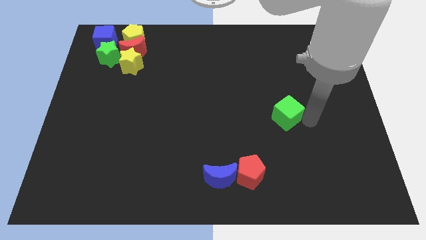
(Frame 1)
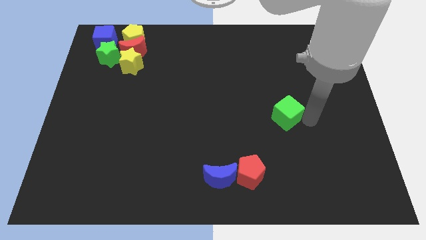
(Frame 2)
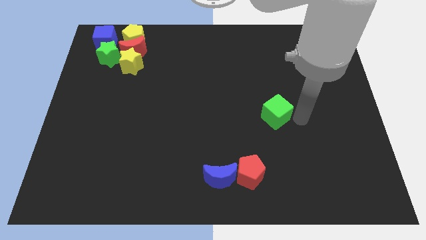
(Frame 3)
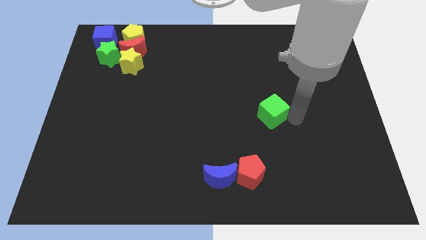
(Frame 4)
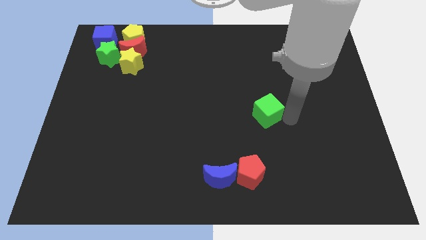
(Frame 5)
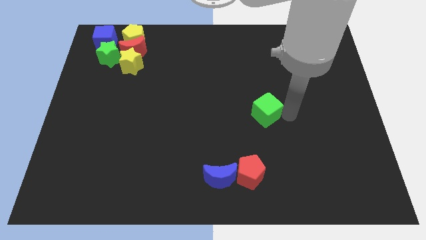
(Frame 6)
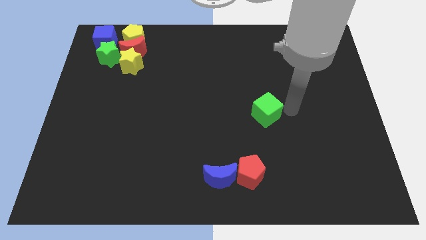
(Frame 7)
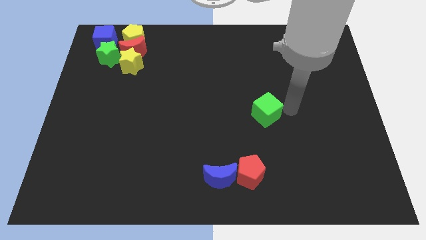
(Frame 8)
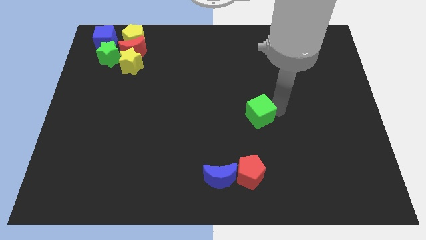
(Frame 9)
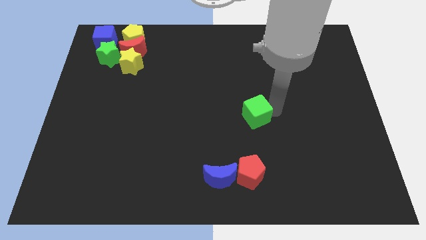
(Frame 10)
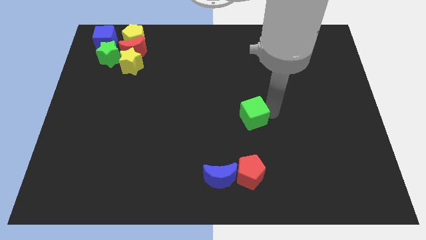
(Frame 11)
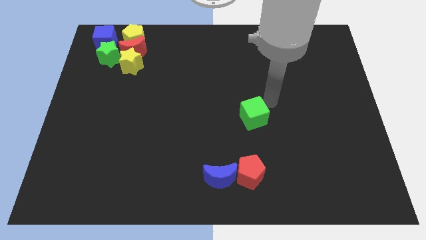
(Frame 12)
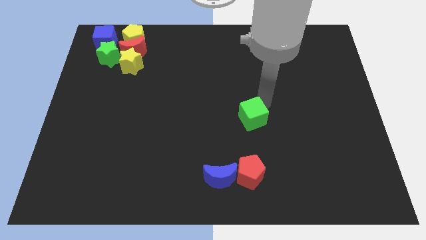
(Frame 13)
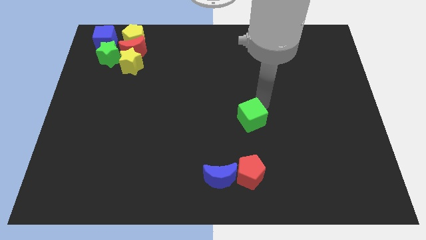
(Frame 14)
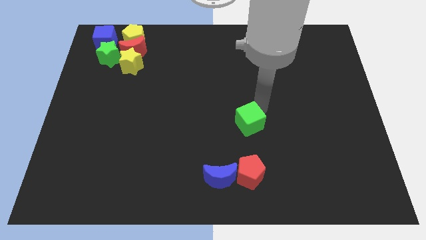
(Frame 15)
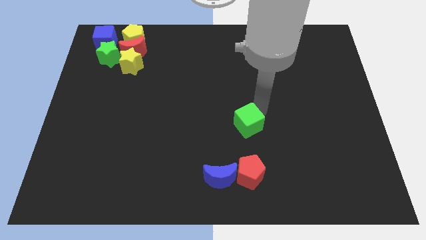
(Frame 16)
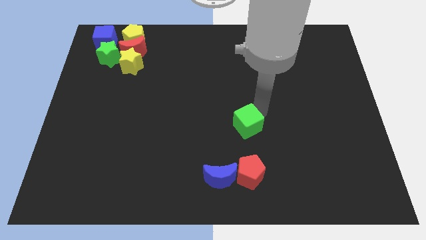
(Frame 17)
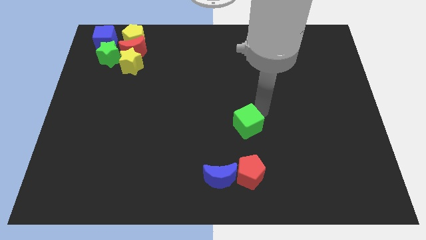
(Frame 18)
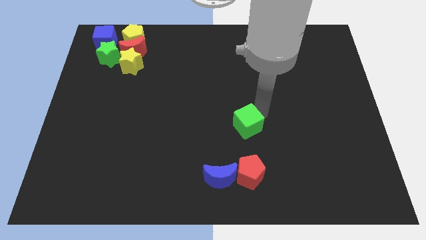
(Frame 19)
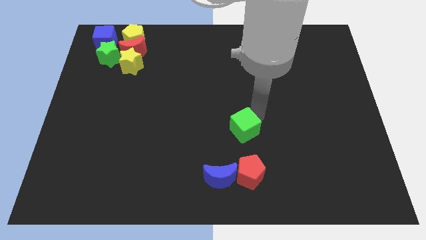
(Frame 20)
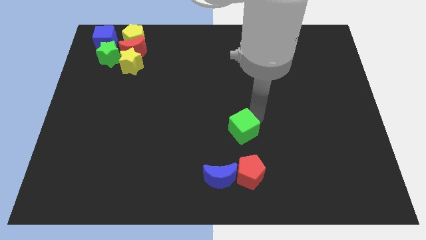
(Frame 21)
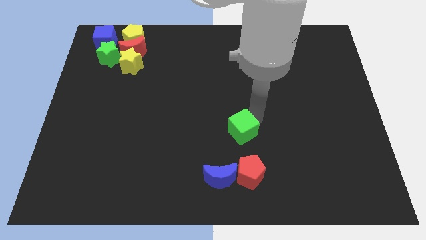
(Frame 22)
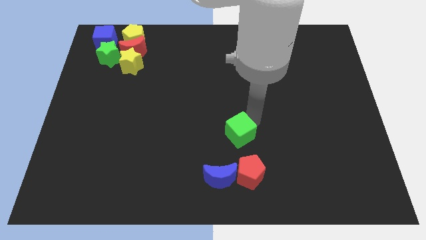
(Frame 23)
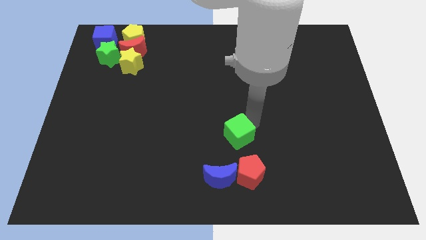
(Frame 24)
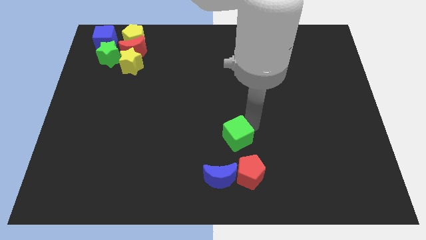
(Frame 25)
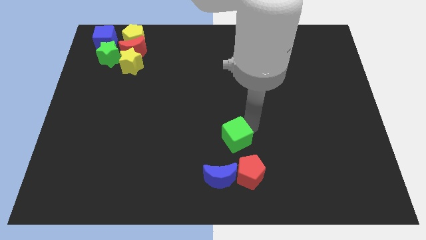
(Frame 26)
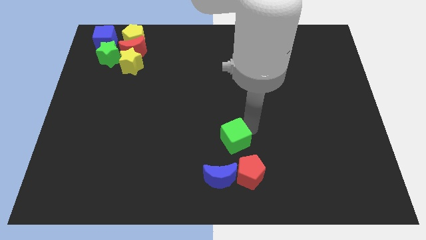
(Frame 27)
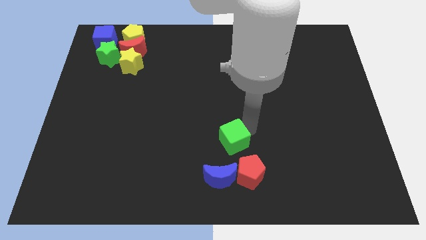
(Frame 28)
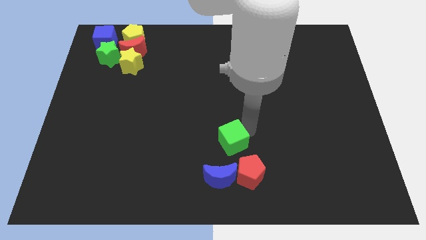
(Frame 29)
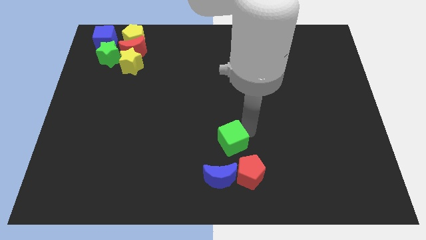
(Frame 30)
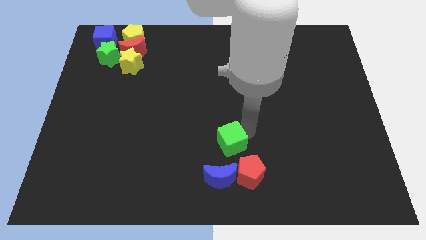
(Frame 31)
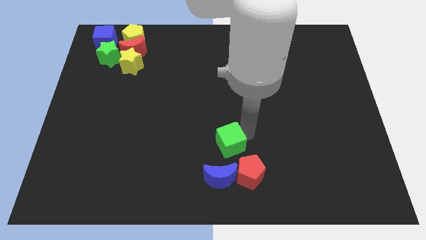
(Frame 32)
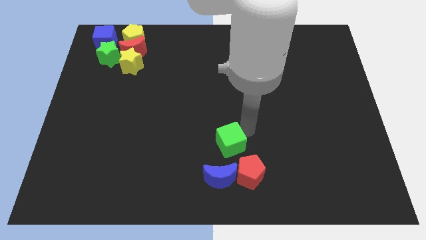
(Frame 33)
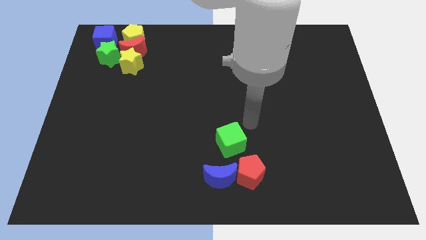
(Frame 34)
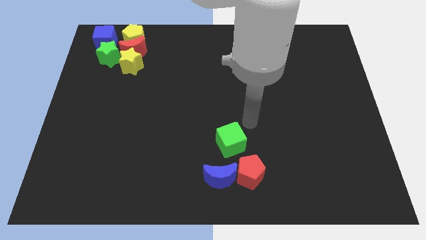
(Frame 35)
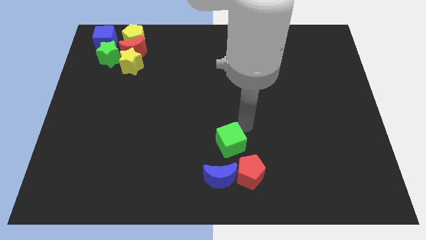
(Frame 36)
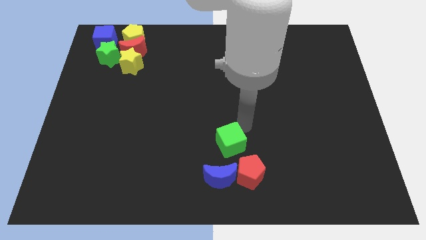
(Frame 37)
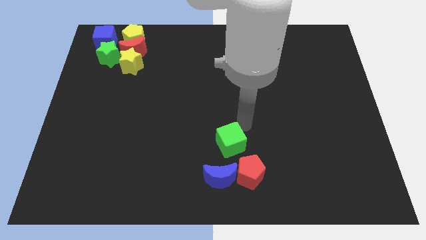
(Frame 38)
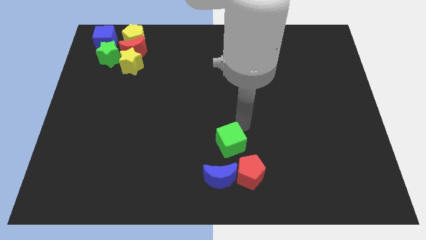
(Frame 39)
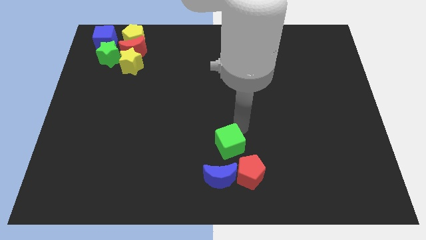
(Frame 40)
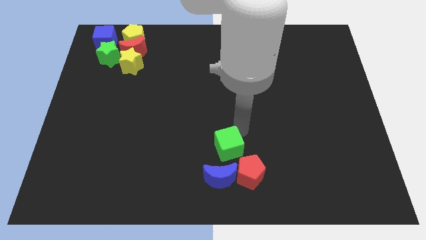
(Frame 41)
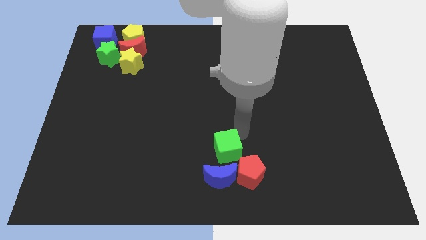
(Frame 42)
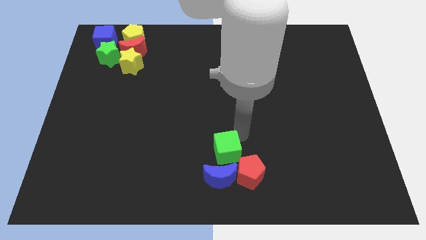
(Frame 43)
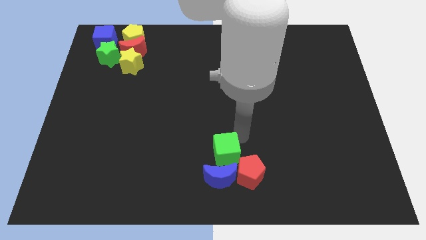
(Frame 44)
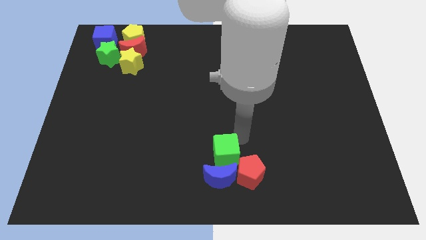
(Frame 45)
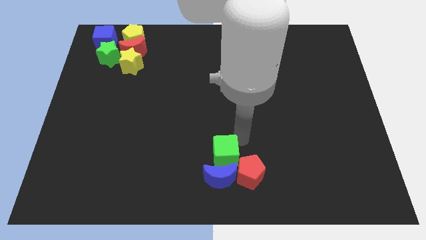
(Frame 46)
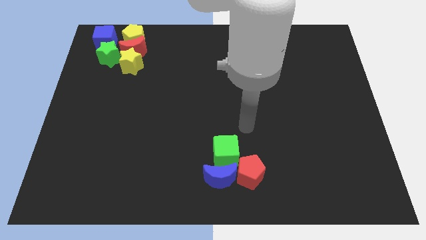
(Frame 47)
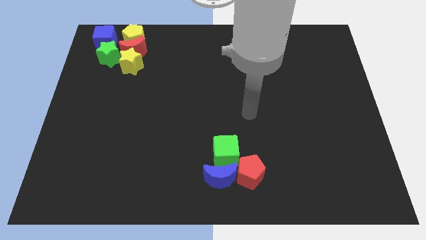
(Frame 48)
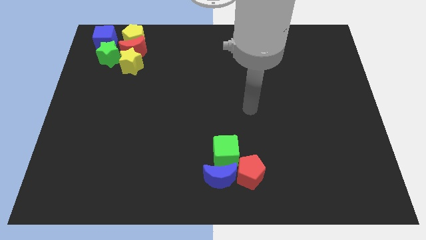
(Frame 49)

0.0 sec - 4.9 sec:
push the green cube into the blue moon

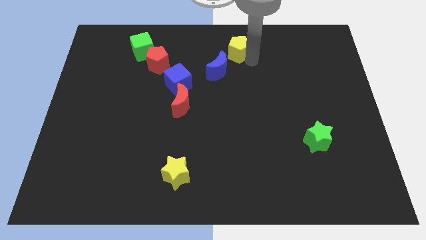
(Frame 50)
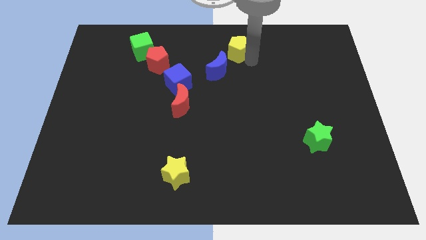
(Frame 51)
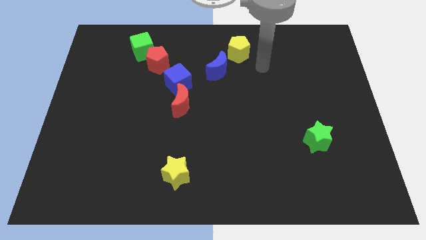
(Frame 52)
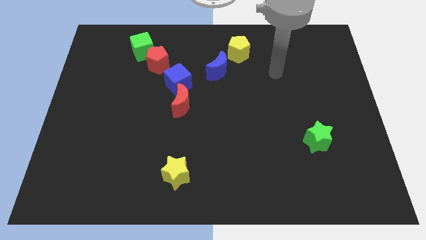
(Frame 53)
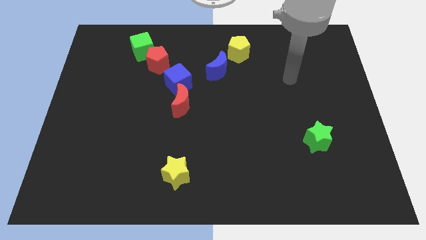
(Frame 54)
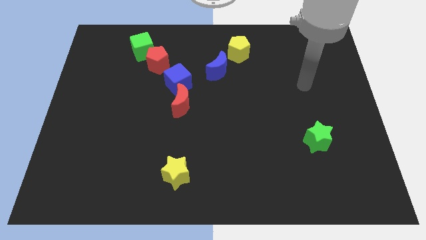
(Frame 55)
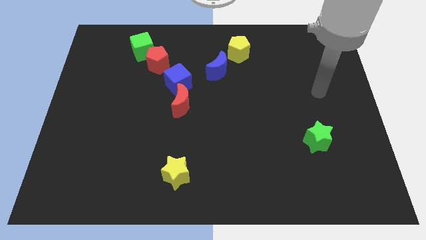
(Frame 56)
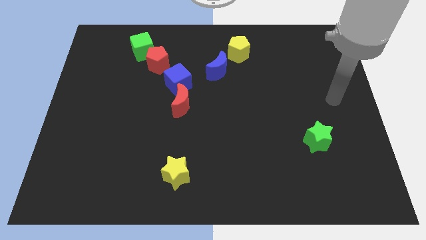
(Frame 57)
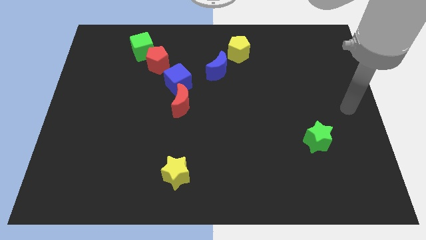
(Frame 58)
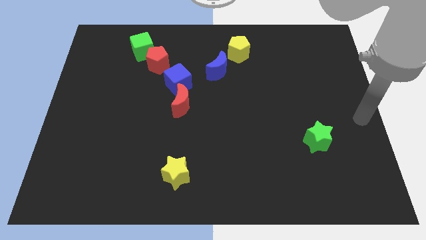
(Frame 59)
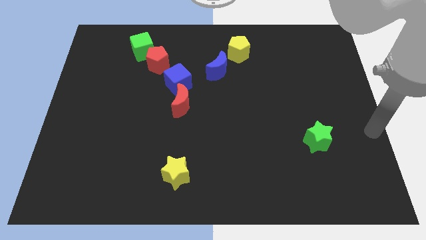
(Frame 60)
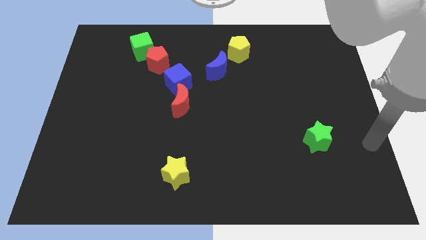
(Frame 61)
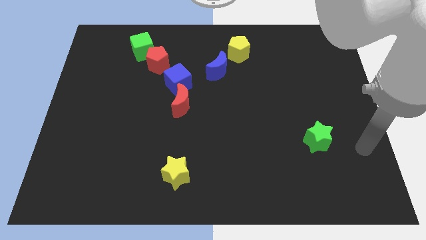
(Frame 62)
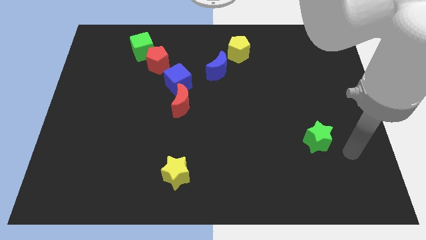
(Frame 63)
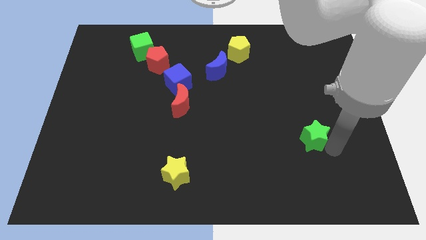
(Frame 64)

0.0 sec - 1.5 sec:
move your arm towards the green star

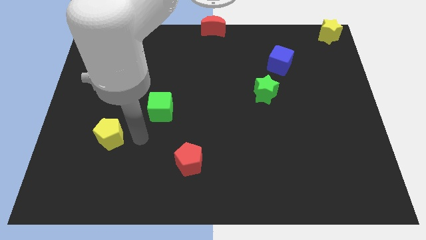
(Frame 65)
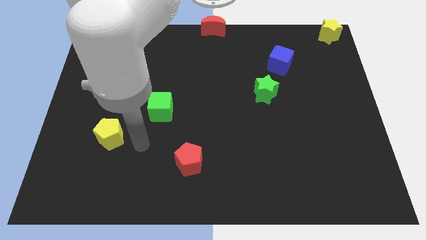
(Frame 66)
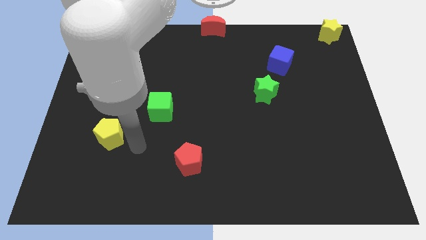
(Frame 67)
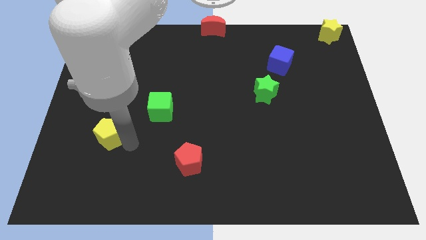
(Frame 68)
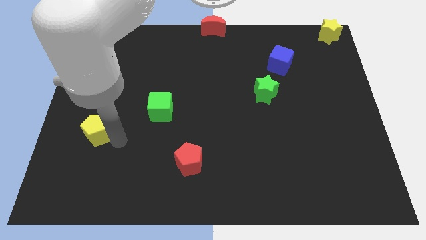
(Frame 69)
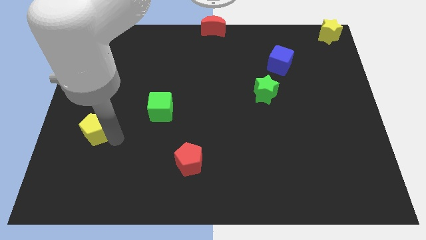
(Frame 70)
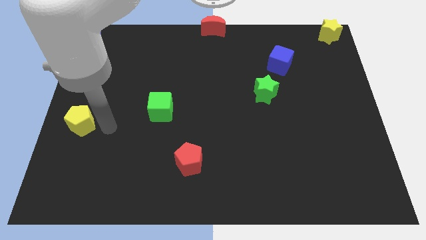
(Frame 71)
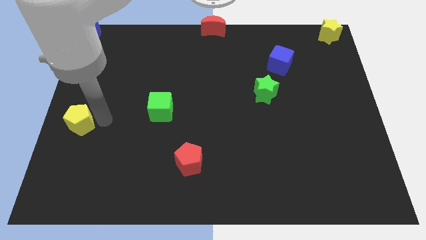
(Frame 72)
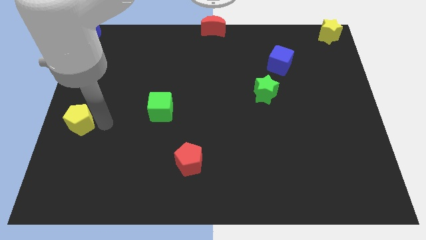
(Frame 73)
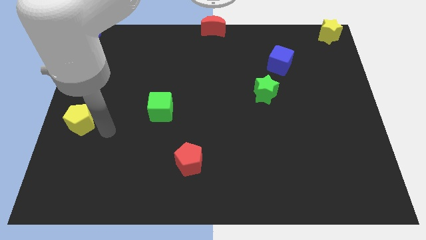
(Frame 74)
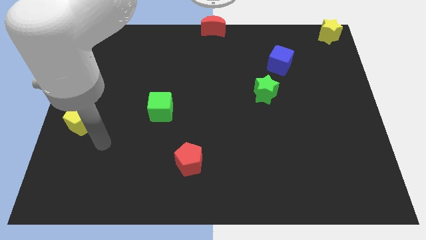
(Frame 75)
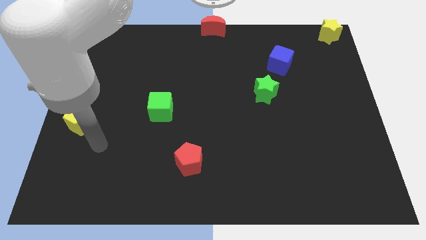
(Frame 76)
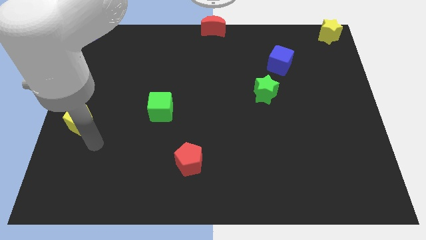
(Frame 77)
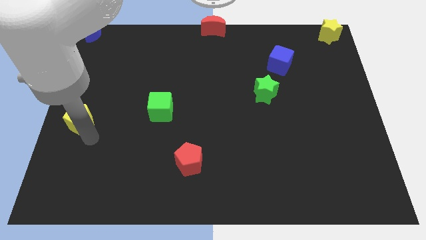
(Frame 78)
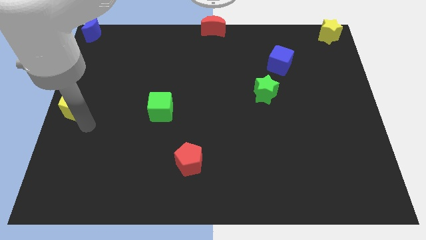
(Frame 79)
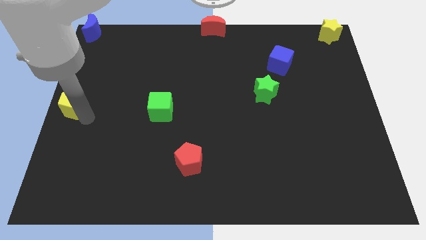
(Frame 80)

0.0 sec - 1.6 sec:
push the yellow pentagon to the center left of the board

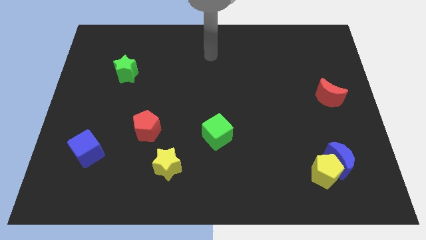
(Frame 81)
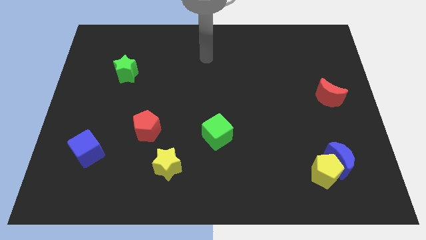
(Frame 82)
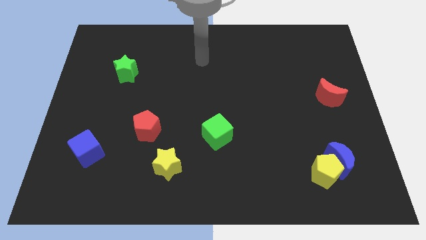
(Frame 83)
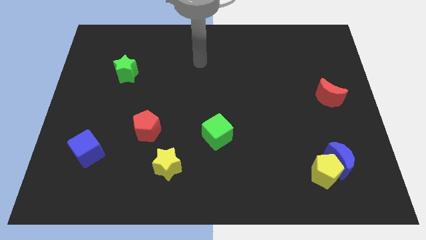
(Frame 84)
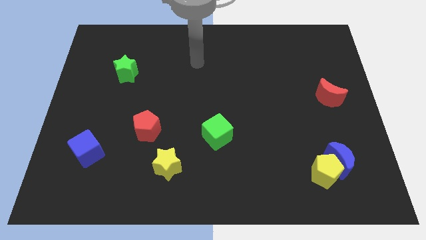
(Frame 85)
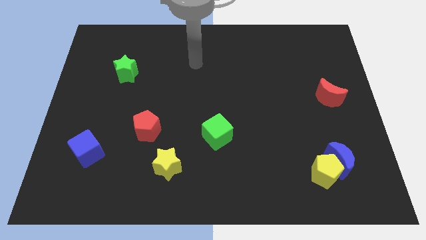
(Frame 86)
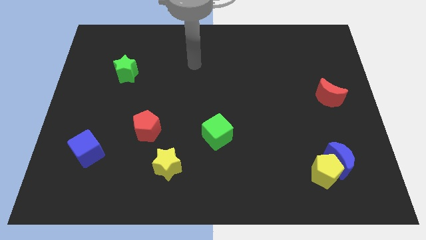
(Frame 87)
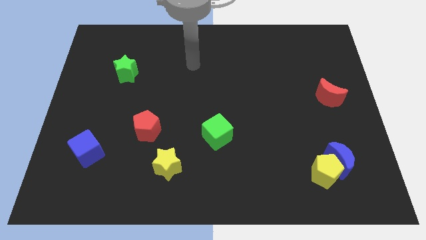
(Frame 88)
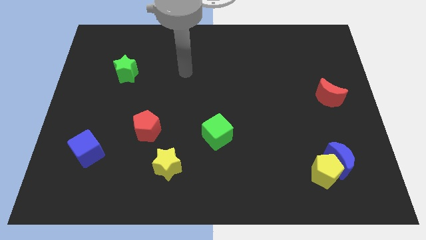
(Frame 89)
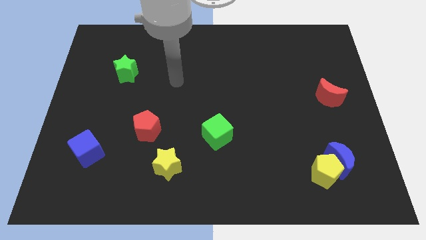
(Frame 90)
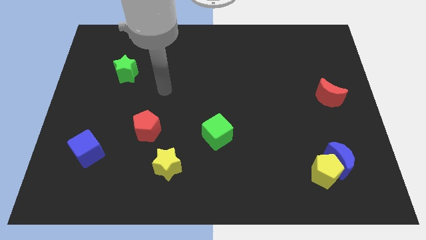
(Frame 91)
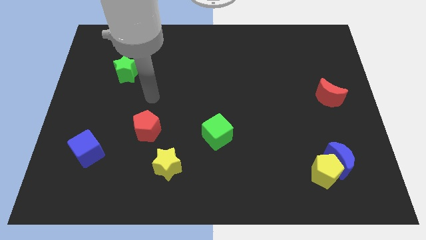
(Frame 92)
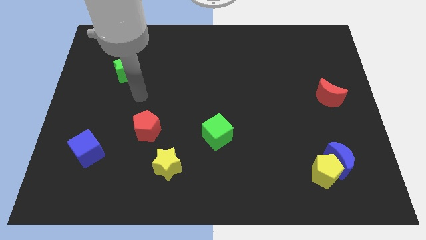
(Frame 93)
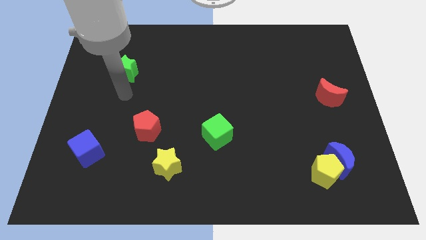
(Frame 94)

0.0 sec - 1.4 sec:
point your hand at the bottom of the green star
